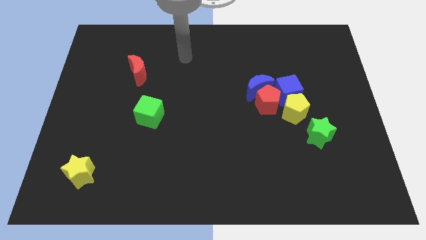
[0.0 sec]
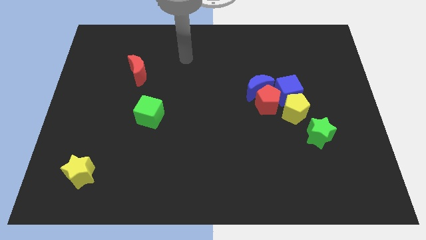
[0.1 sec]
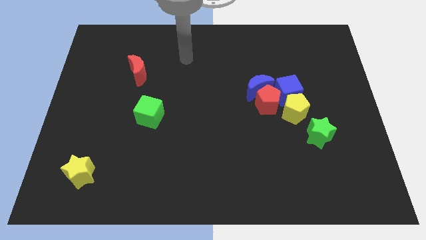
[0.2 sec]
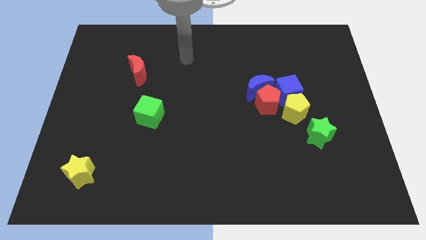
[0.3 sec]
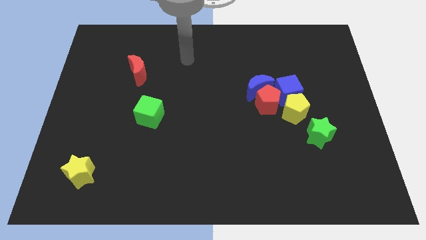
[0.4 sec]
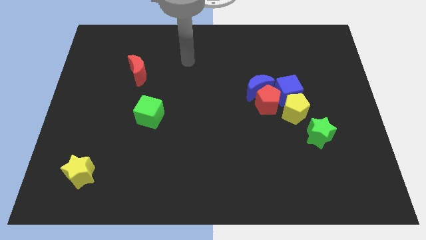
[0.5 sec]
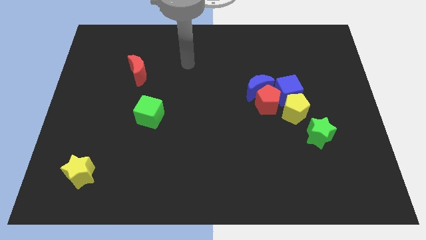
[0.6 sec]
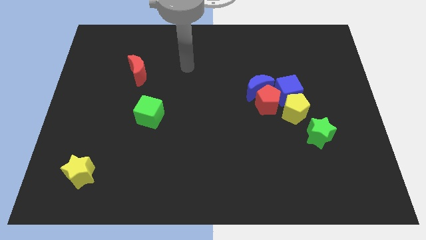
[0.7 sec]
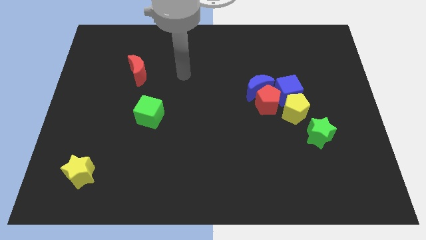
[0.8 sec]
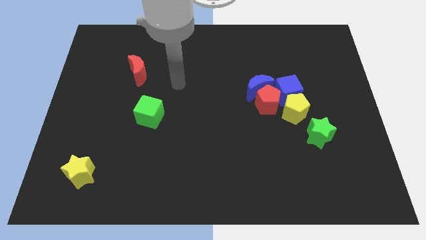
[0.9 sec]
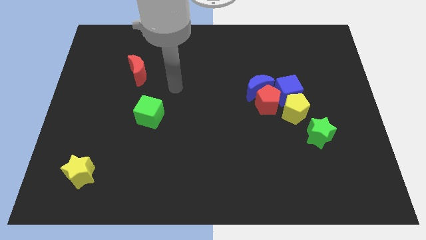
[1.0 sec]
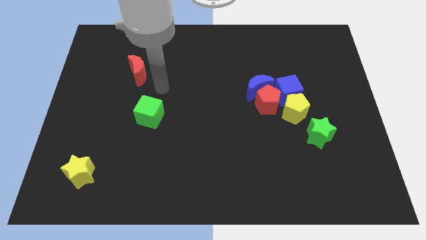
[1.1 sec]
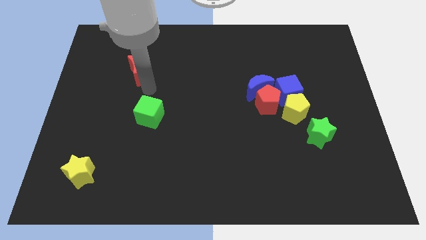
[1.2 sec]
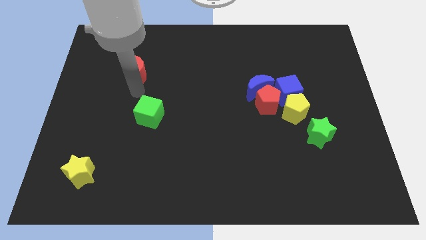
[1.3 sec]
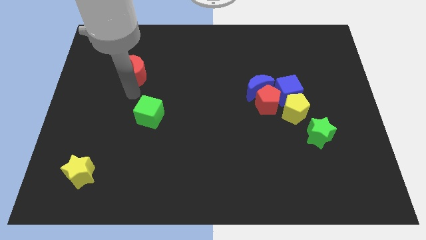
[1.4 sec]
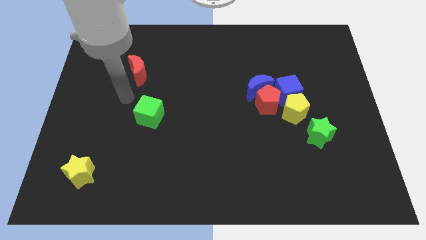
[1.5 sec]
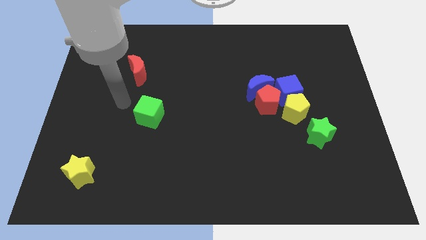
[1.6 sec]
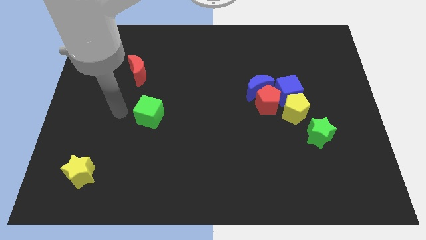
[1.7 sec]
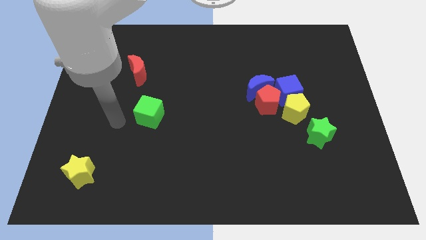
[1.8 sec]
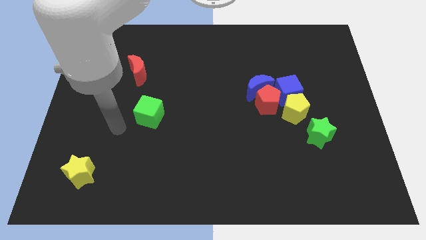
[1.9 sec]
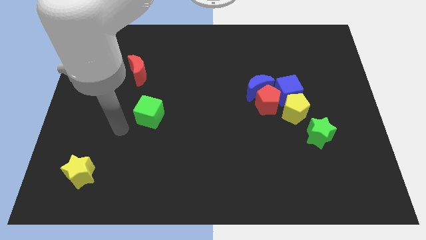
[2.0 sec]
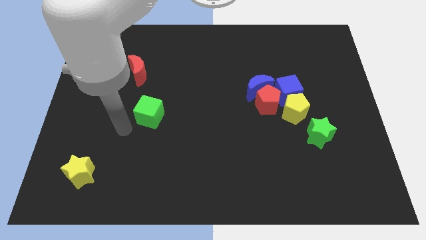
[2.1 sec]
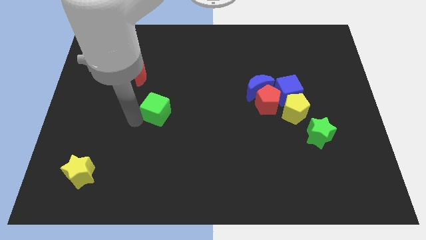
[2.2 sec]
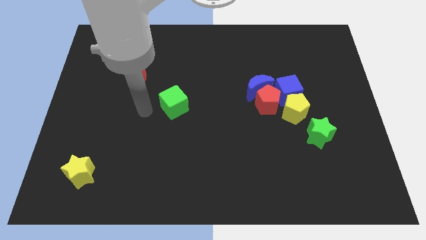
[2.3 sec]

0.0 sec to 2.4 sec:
push the green cube slightly to the right

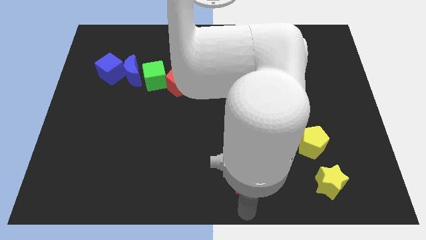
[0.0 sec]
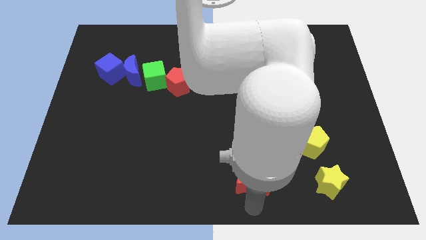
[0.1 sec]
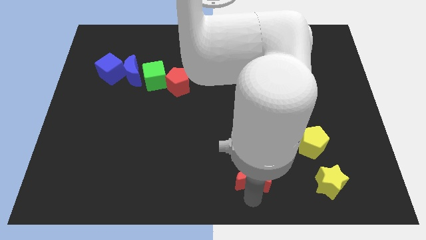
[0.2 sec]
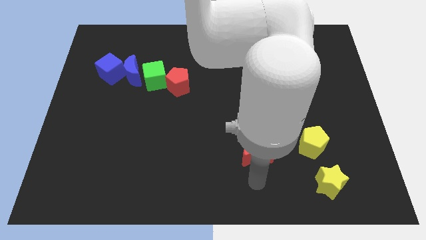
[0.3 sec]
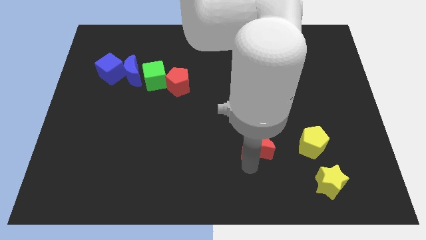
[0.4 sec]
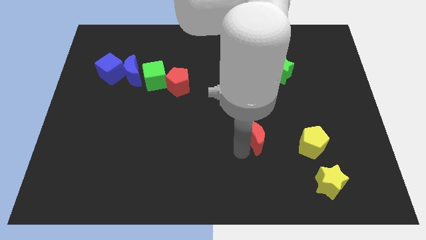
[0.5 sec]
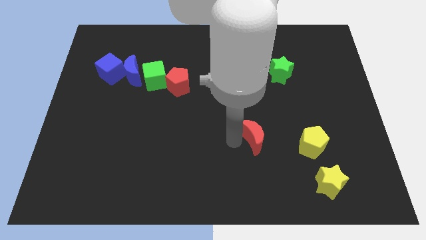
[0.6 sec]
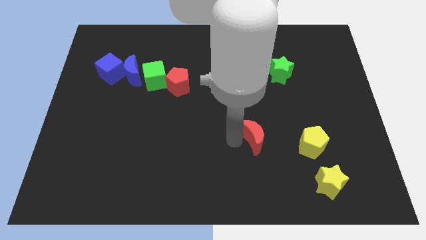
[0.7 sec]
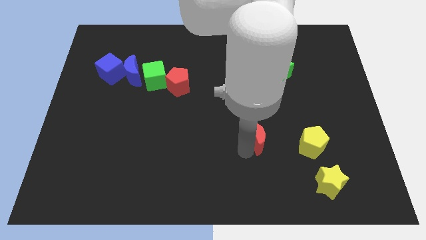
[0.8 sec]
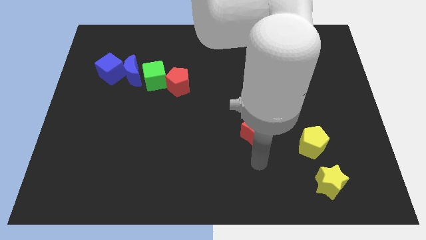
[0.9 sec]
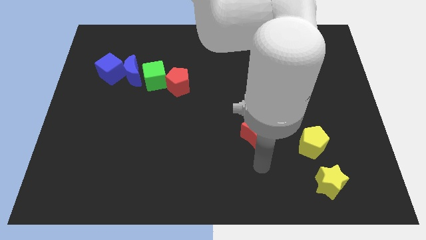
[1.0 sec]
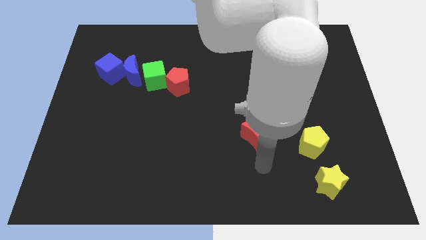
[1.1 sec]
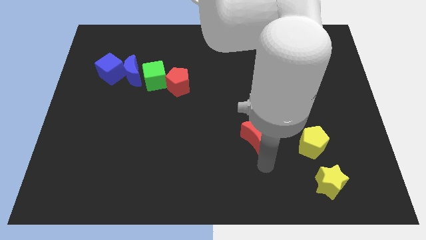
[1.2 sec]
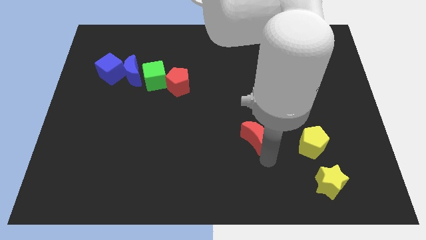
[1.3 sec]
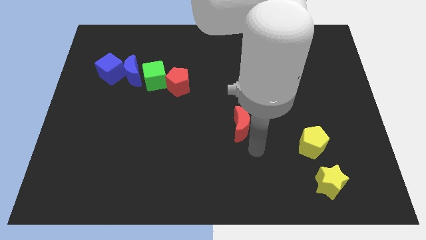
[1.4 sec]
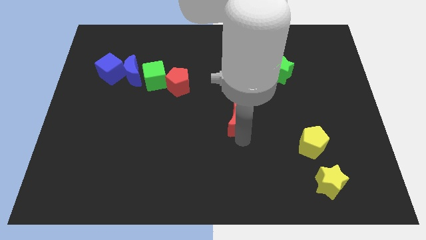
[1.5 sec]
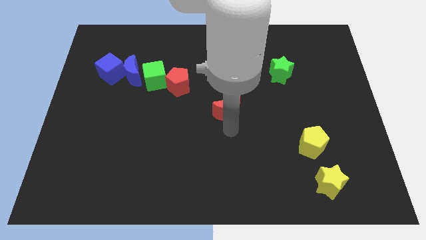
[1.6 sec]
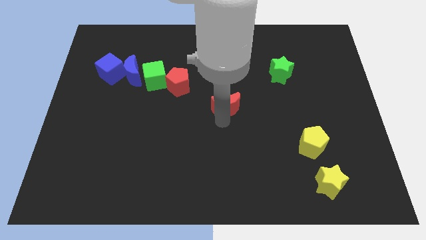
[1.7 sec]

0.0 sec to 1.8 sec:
push the red crescent towards the red pentagon

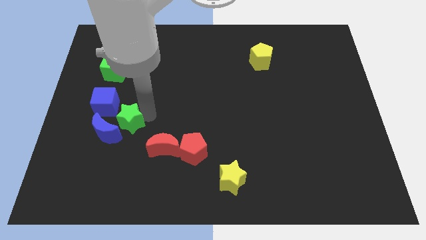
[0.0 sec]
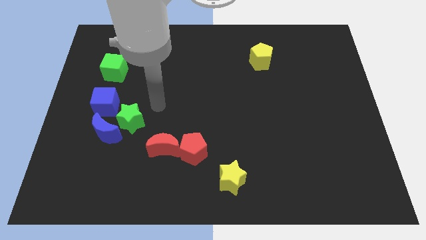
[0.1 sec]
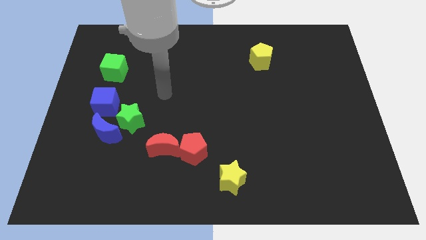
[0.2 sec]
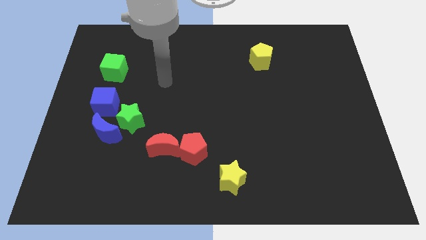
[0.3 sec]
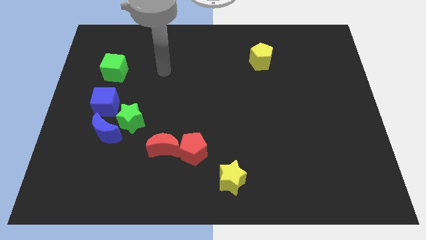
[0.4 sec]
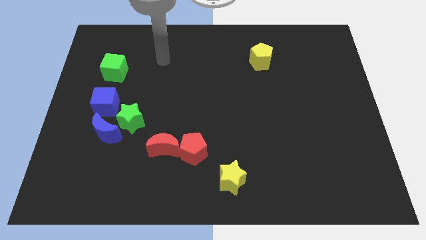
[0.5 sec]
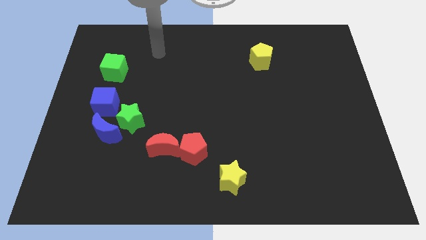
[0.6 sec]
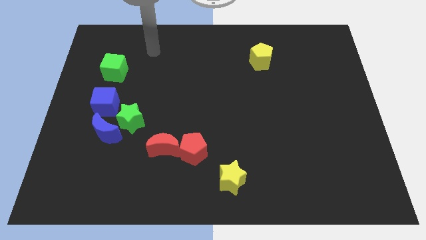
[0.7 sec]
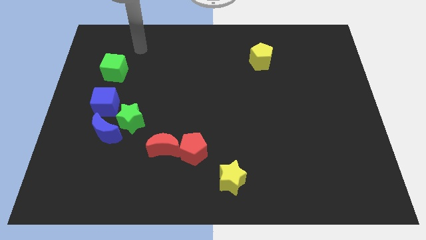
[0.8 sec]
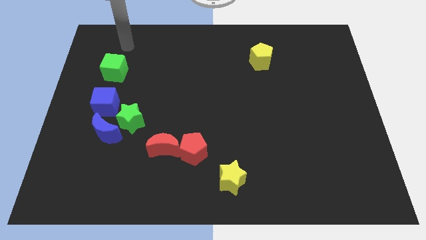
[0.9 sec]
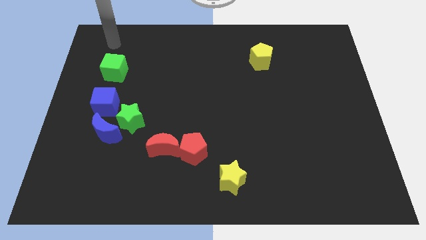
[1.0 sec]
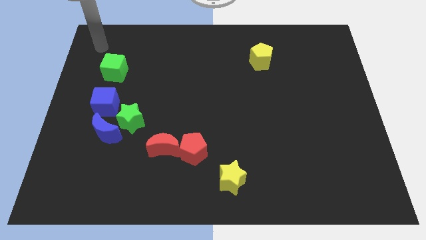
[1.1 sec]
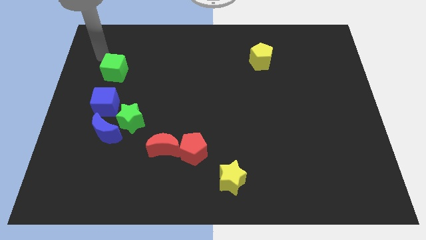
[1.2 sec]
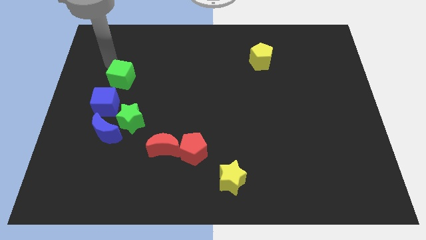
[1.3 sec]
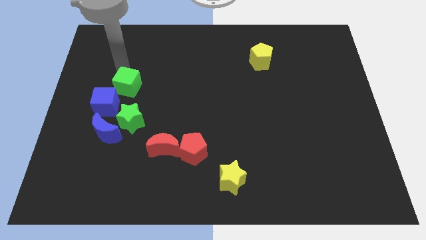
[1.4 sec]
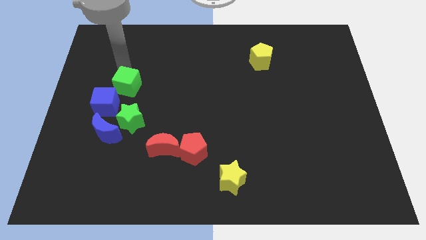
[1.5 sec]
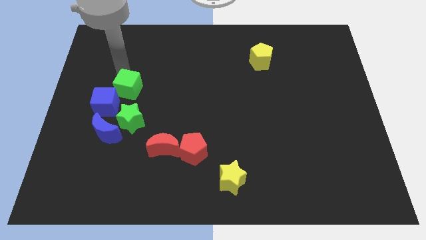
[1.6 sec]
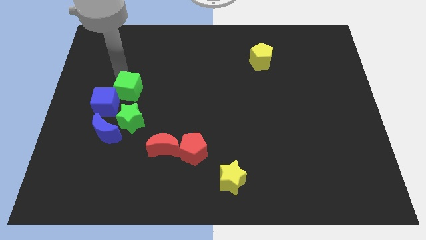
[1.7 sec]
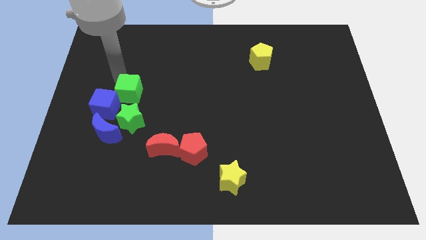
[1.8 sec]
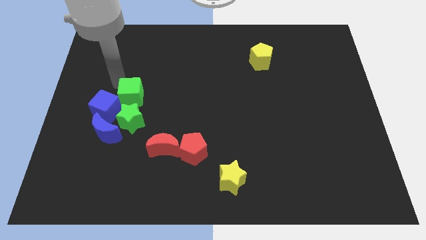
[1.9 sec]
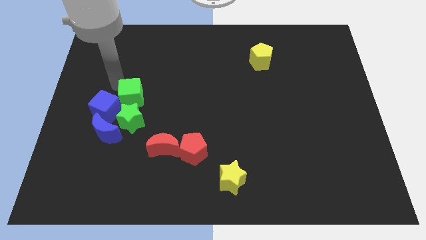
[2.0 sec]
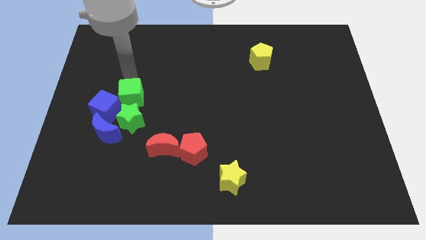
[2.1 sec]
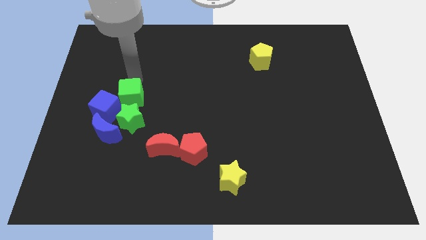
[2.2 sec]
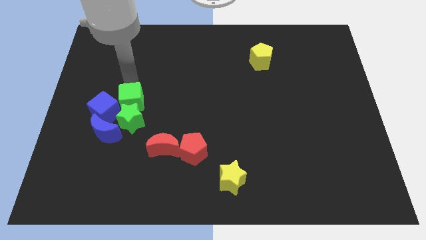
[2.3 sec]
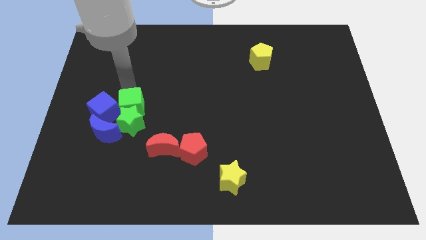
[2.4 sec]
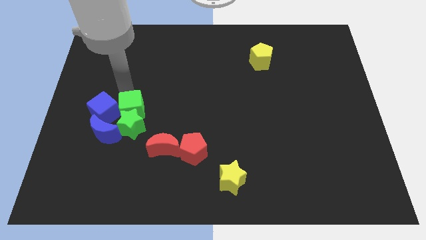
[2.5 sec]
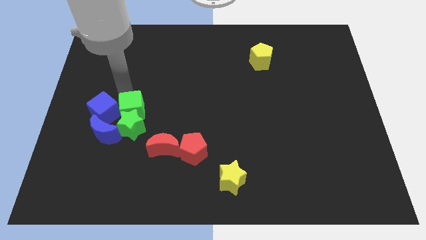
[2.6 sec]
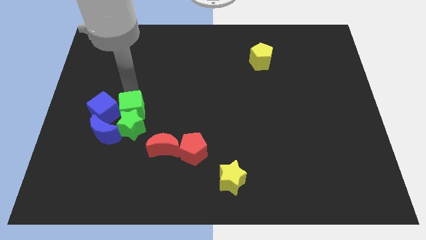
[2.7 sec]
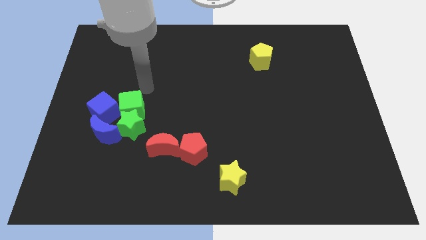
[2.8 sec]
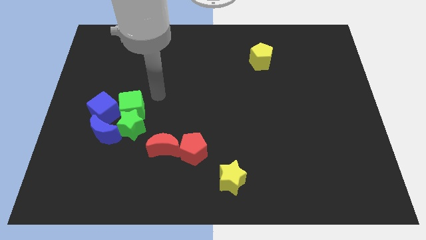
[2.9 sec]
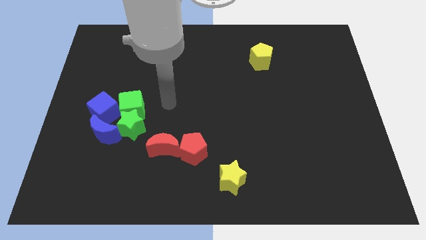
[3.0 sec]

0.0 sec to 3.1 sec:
push the green cube into the green star

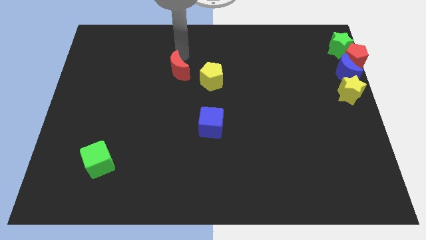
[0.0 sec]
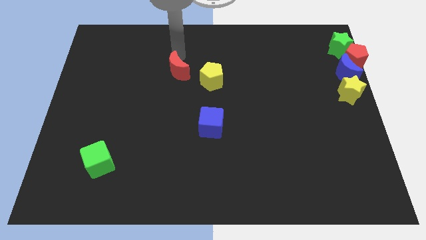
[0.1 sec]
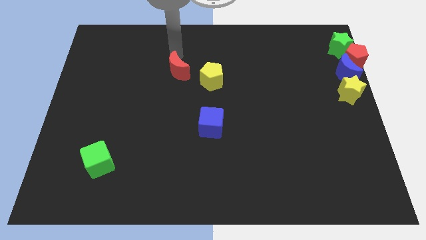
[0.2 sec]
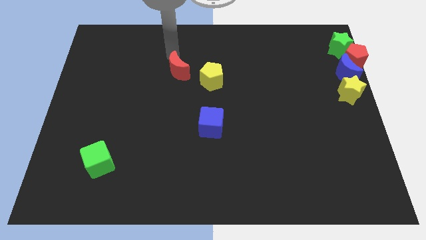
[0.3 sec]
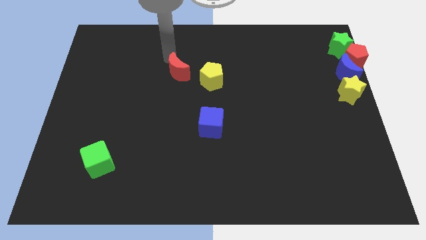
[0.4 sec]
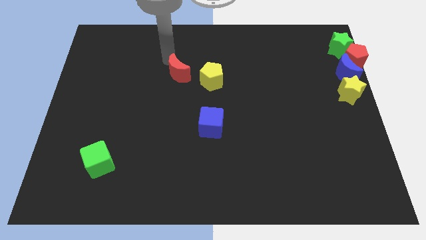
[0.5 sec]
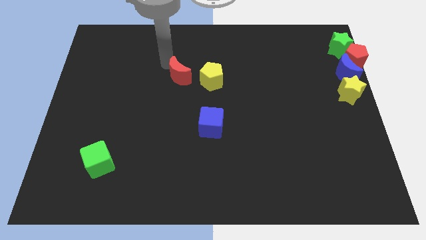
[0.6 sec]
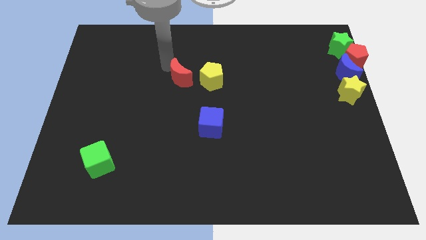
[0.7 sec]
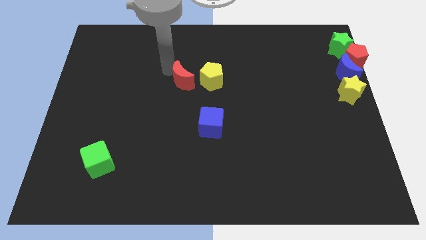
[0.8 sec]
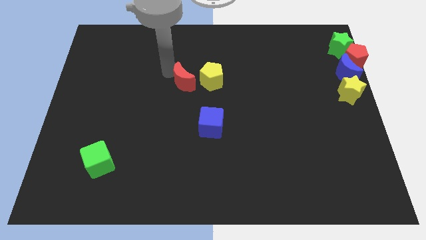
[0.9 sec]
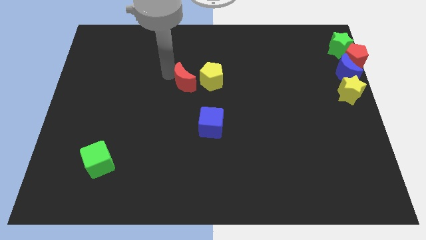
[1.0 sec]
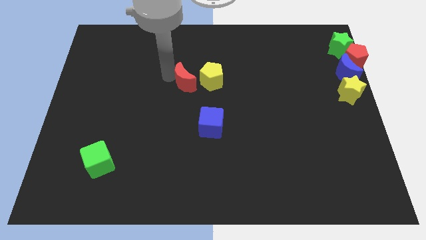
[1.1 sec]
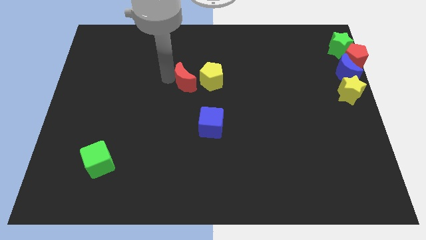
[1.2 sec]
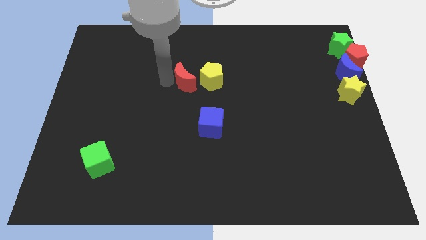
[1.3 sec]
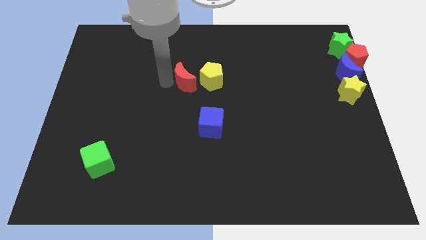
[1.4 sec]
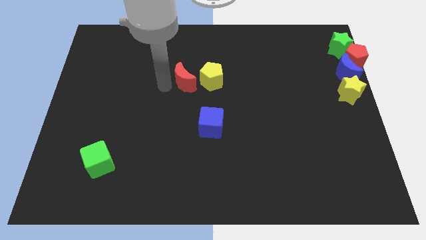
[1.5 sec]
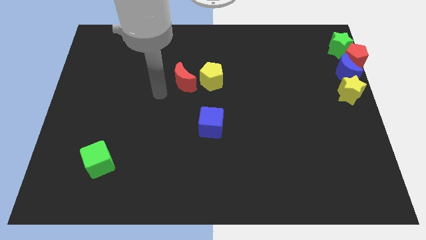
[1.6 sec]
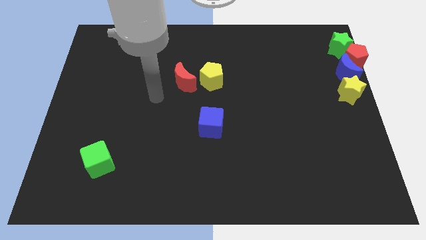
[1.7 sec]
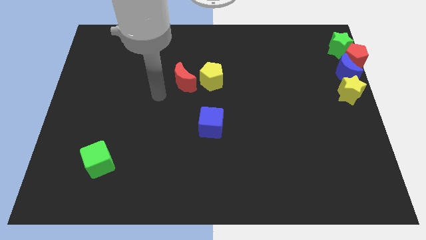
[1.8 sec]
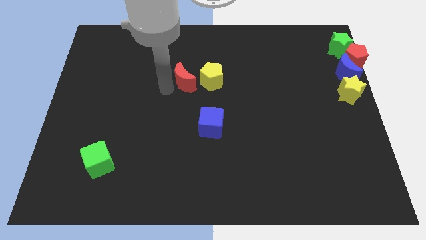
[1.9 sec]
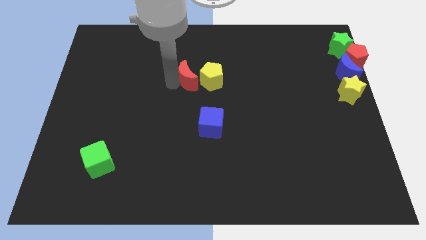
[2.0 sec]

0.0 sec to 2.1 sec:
move the red moon near to the yellow pentagon
